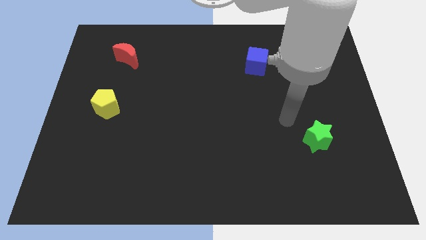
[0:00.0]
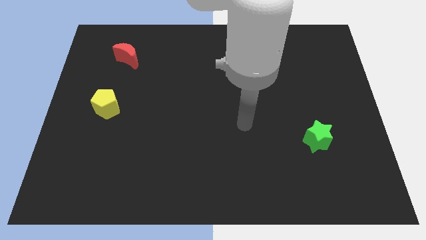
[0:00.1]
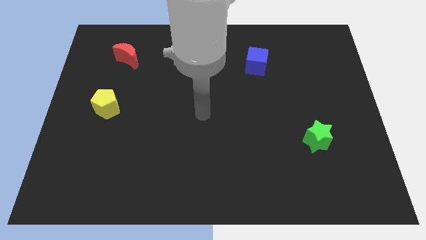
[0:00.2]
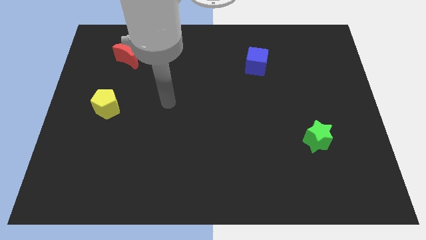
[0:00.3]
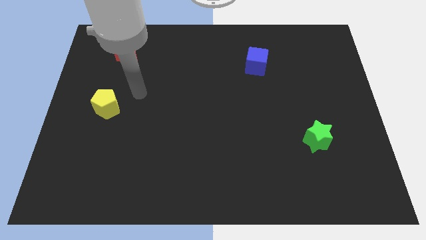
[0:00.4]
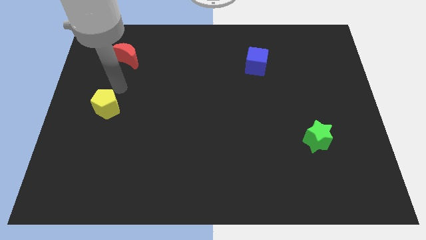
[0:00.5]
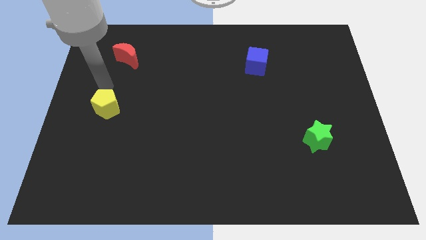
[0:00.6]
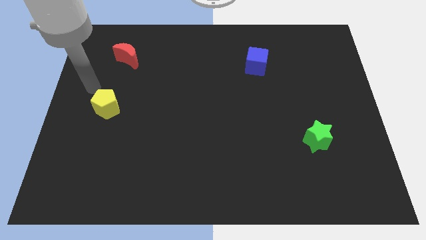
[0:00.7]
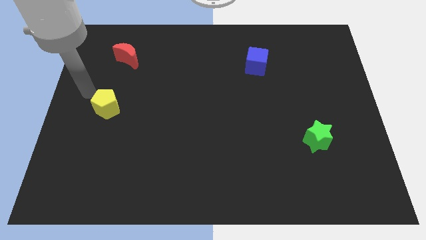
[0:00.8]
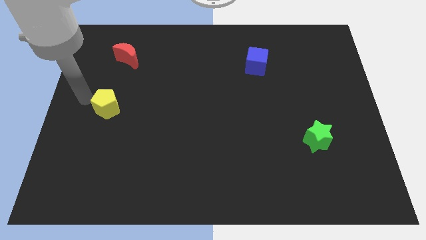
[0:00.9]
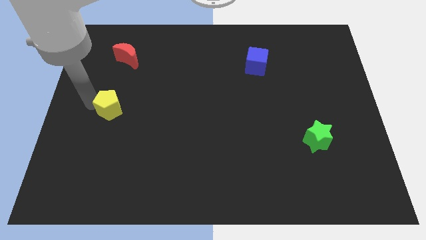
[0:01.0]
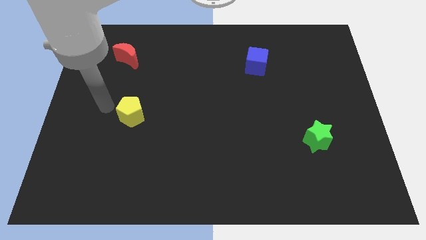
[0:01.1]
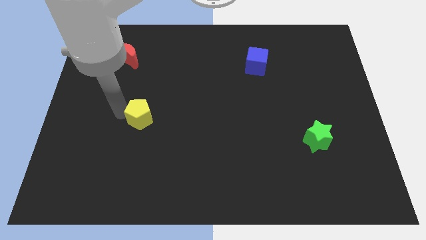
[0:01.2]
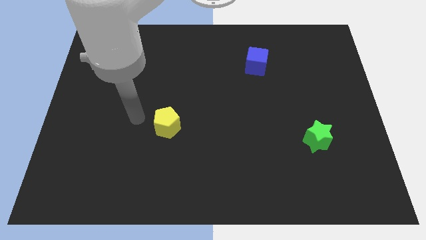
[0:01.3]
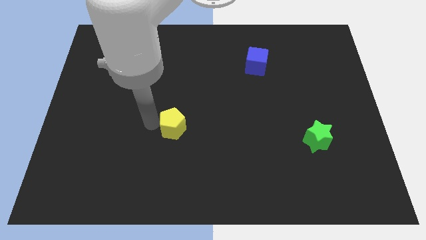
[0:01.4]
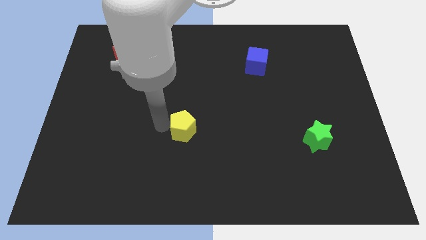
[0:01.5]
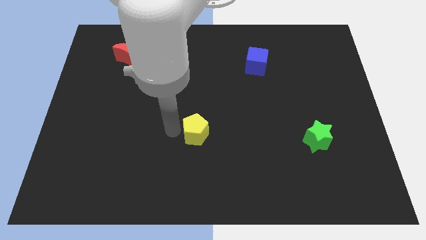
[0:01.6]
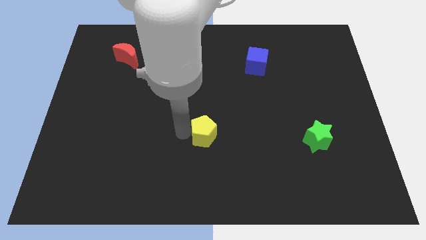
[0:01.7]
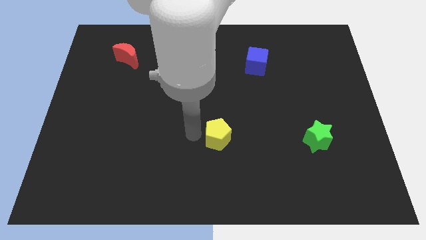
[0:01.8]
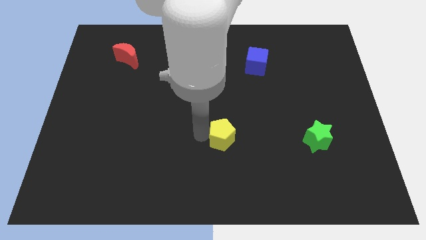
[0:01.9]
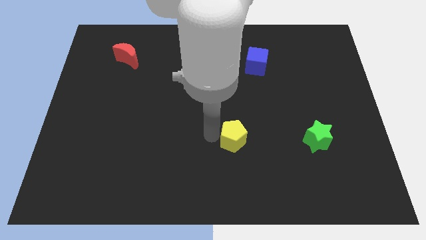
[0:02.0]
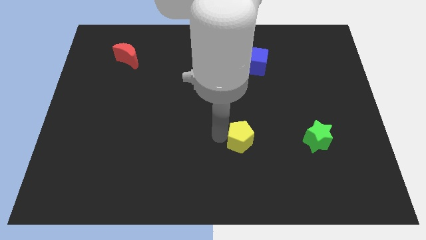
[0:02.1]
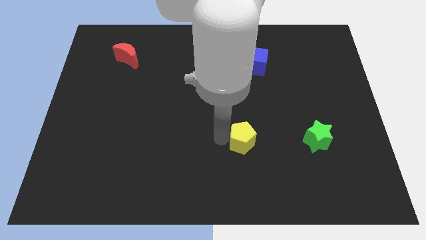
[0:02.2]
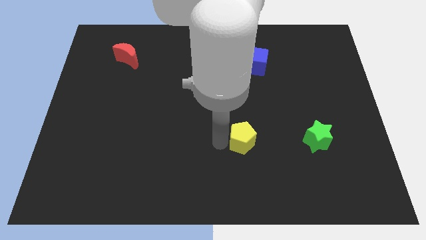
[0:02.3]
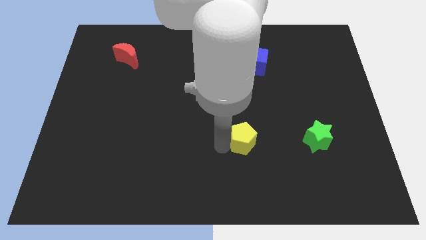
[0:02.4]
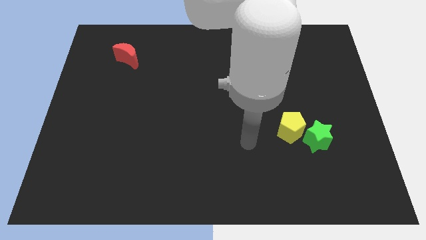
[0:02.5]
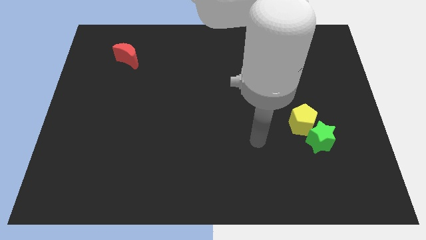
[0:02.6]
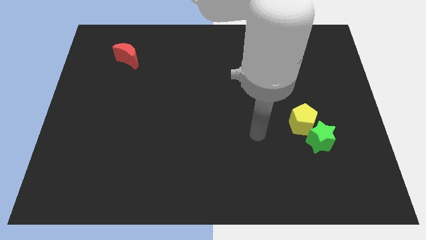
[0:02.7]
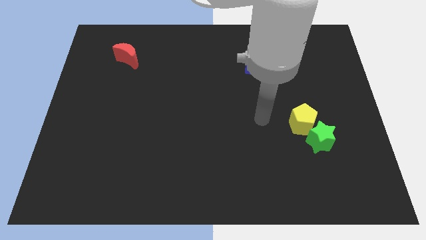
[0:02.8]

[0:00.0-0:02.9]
move the pentagon close to the green star

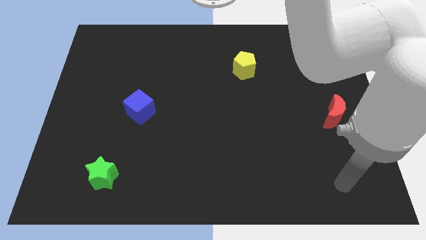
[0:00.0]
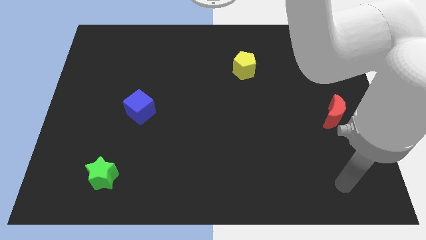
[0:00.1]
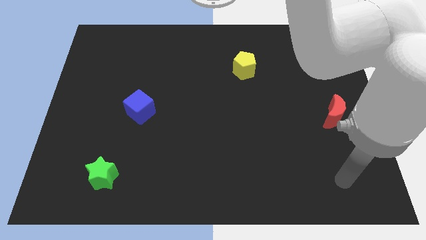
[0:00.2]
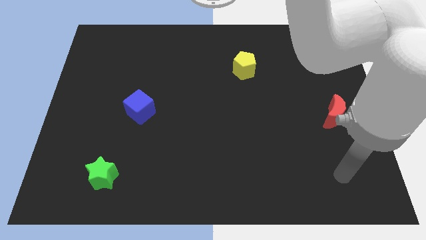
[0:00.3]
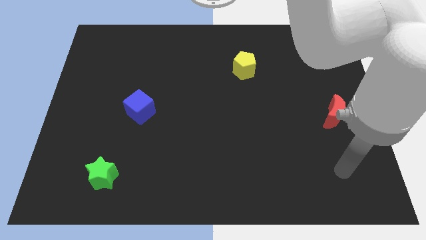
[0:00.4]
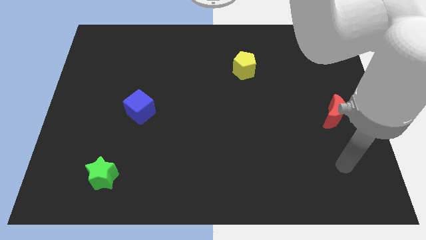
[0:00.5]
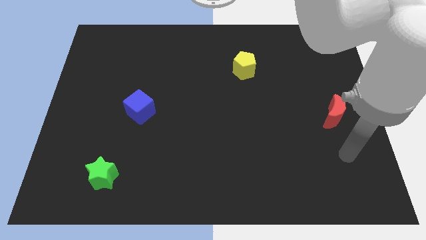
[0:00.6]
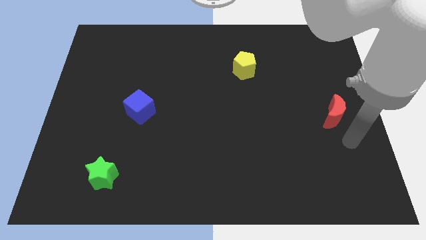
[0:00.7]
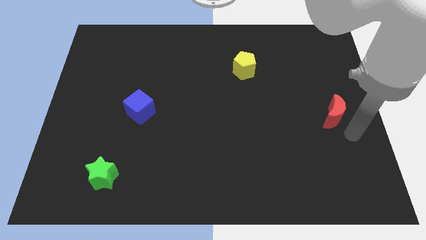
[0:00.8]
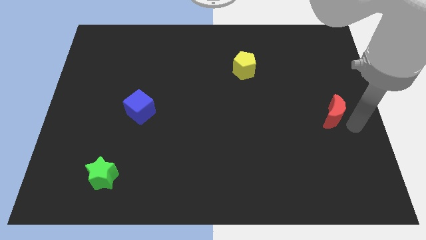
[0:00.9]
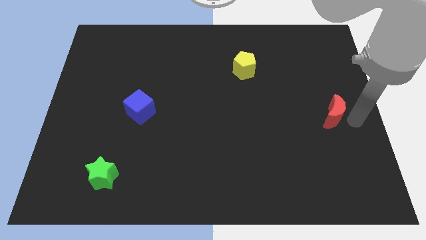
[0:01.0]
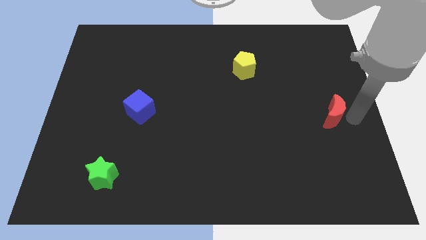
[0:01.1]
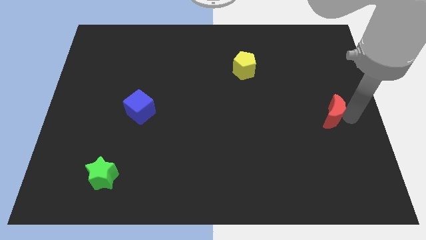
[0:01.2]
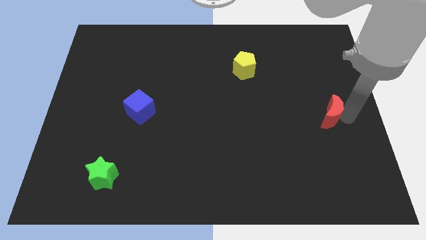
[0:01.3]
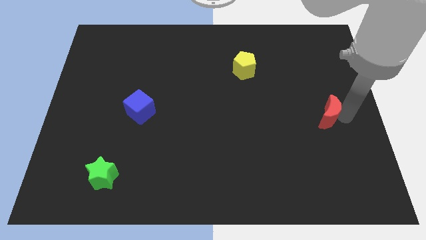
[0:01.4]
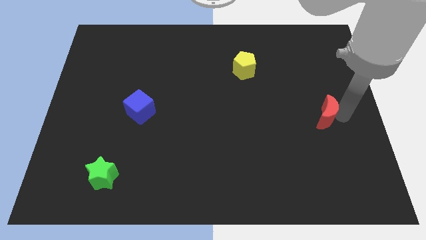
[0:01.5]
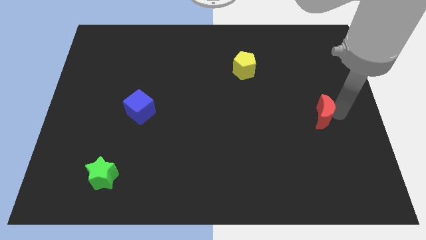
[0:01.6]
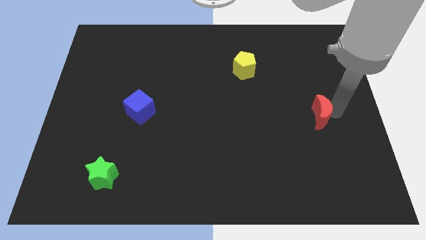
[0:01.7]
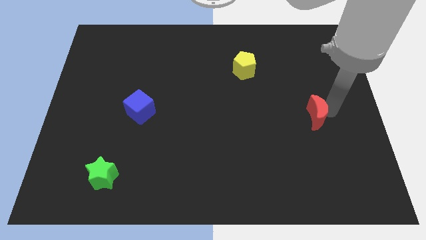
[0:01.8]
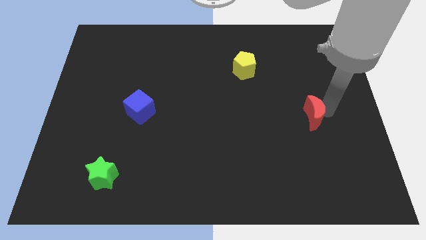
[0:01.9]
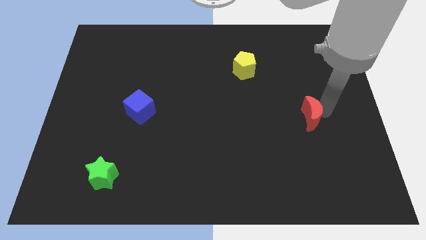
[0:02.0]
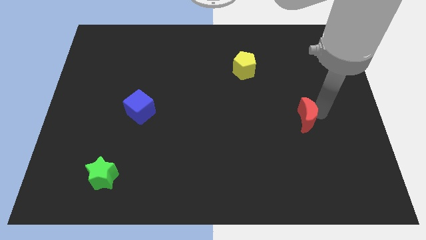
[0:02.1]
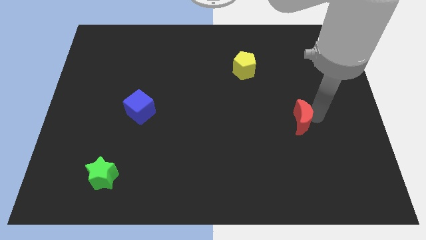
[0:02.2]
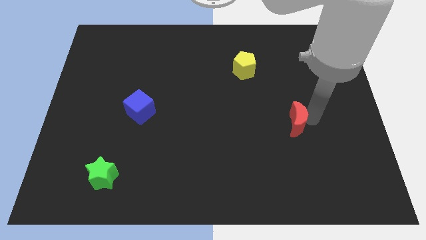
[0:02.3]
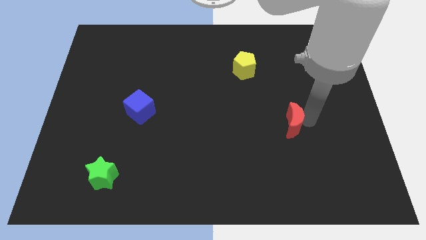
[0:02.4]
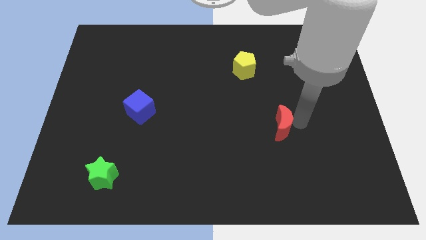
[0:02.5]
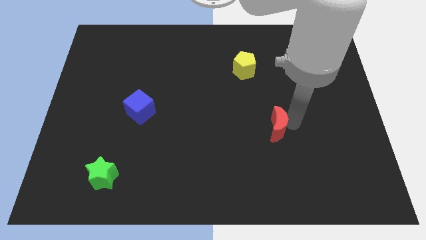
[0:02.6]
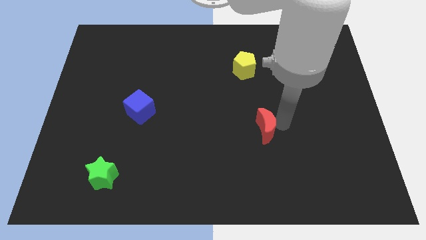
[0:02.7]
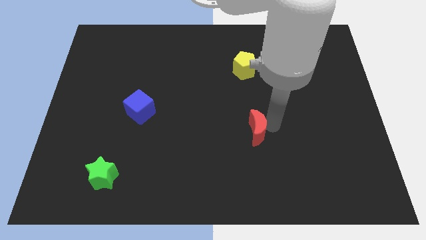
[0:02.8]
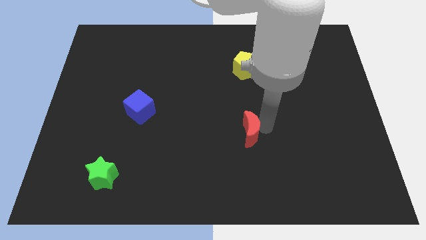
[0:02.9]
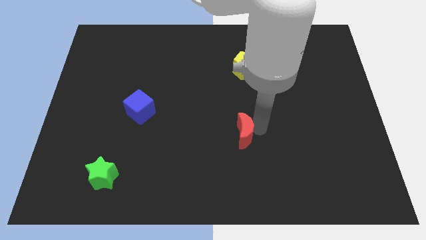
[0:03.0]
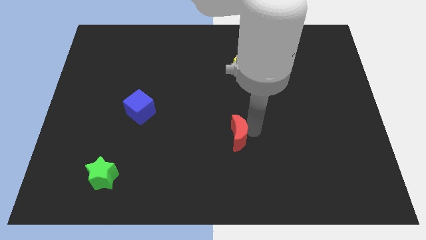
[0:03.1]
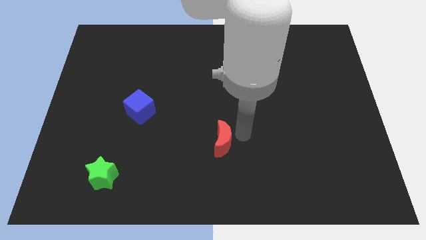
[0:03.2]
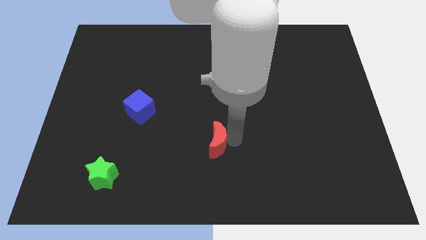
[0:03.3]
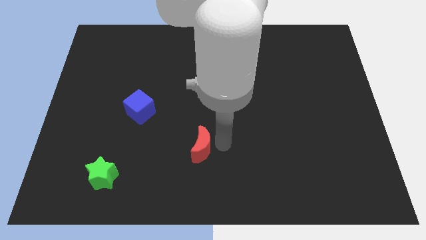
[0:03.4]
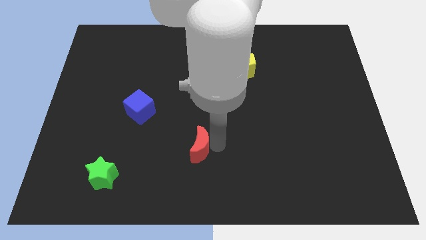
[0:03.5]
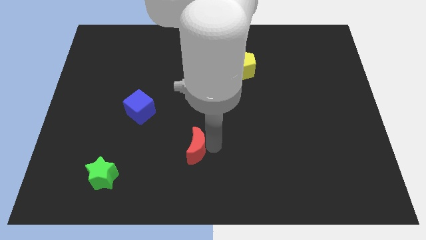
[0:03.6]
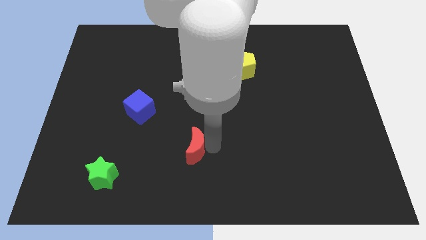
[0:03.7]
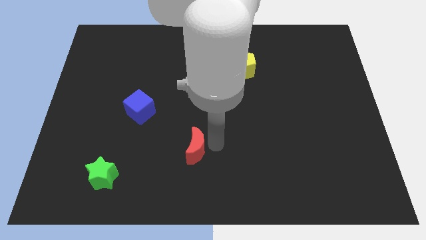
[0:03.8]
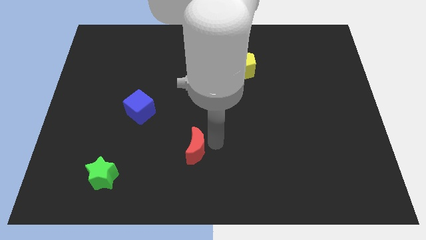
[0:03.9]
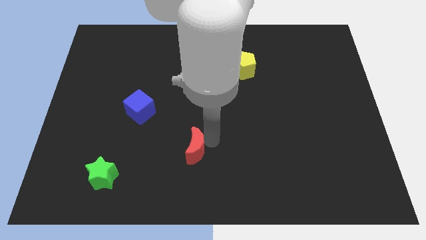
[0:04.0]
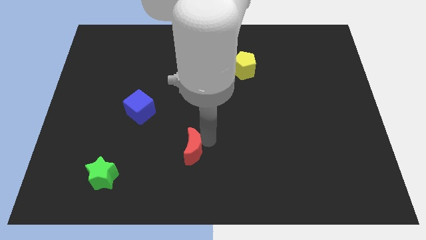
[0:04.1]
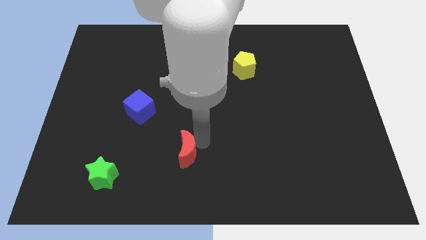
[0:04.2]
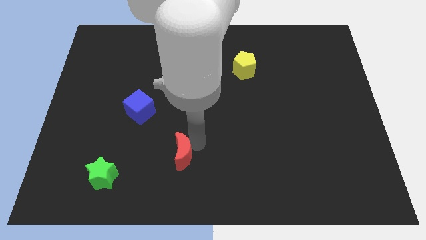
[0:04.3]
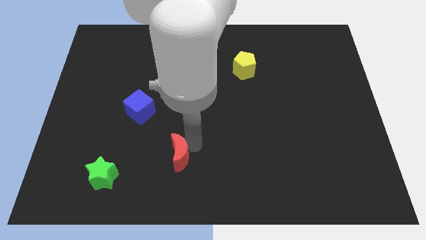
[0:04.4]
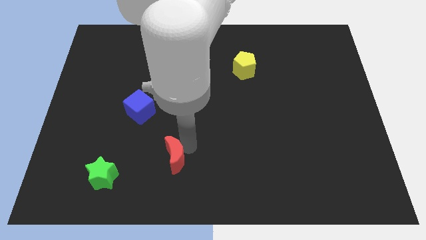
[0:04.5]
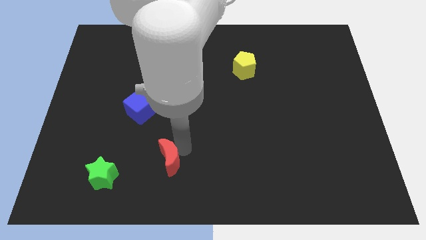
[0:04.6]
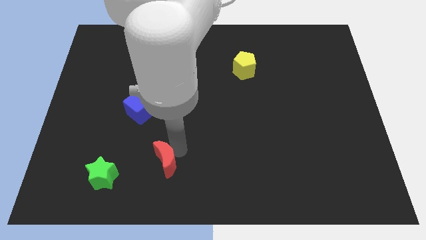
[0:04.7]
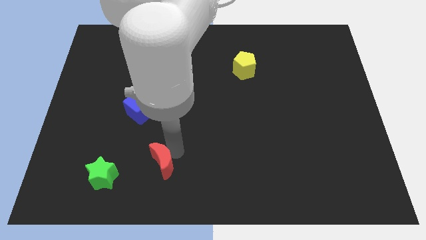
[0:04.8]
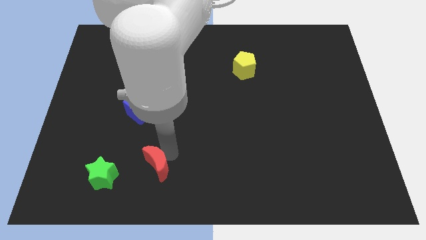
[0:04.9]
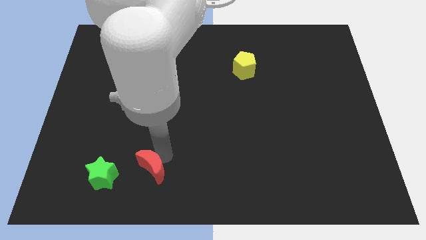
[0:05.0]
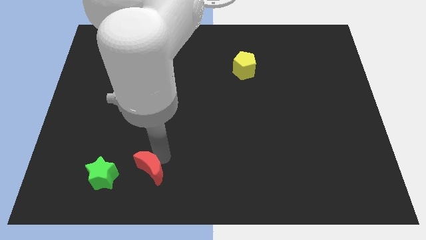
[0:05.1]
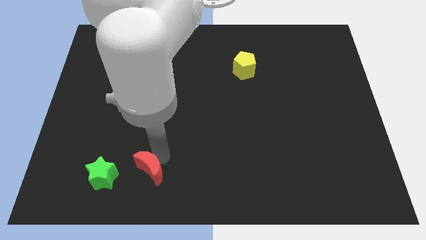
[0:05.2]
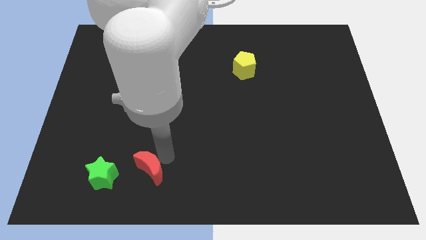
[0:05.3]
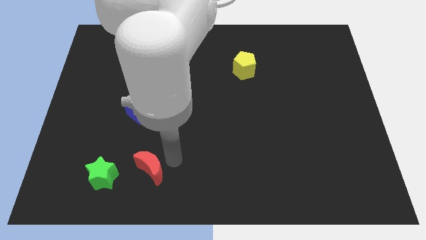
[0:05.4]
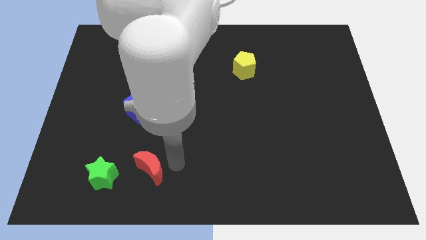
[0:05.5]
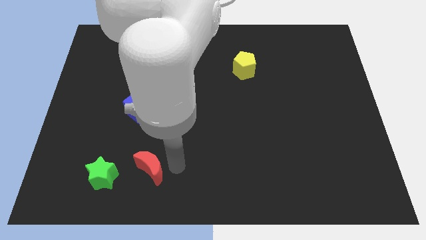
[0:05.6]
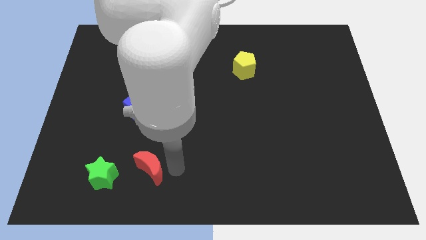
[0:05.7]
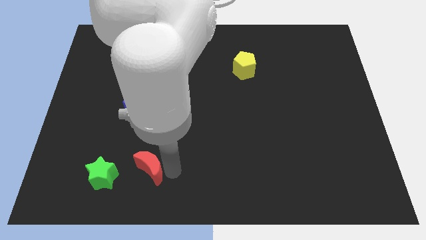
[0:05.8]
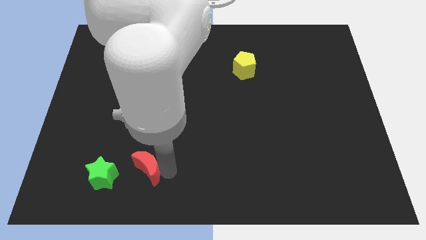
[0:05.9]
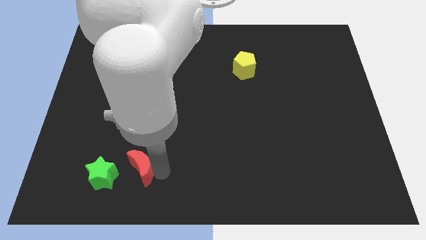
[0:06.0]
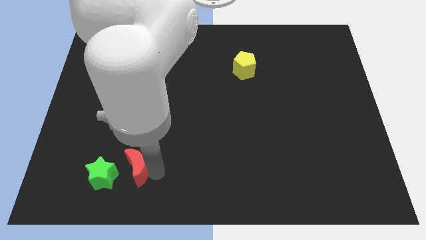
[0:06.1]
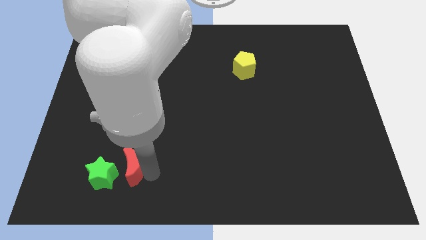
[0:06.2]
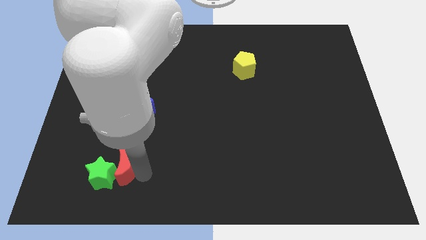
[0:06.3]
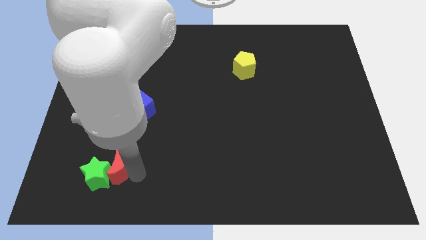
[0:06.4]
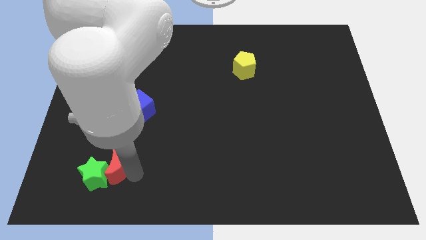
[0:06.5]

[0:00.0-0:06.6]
slide the red block next to the green block
